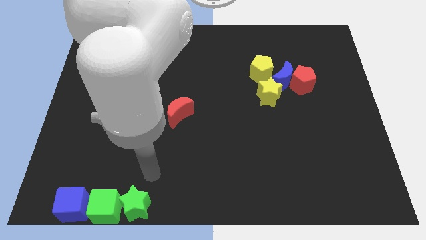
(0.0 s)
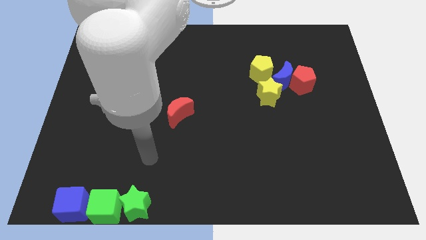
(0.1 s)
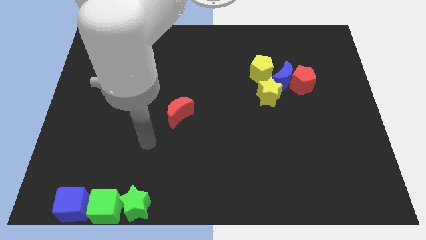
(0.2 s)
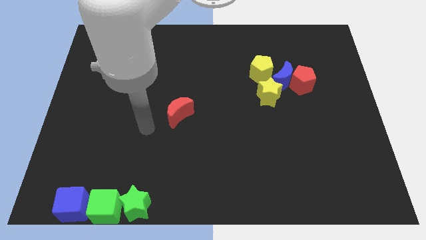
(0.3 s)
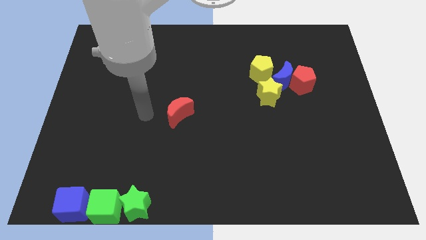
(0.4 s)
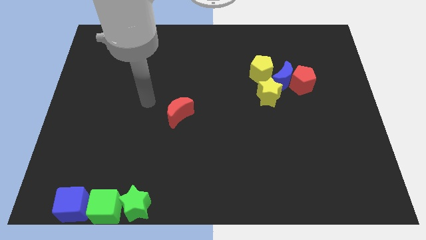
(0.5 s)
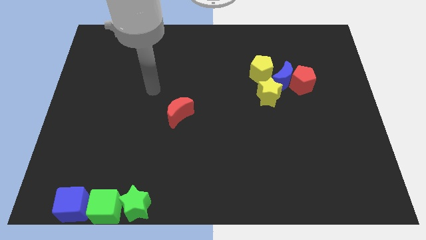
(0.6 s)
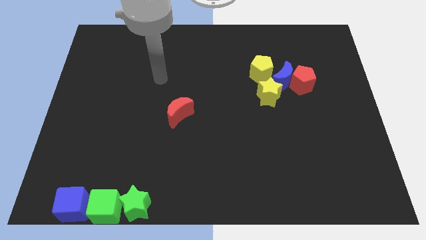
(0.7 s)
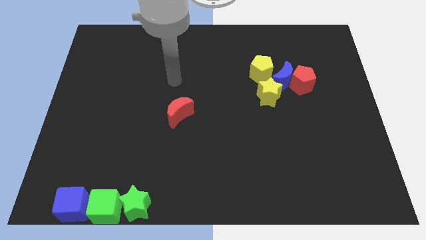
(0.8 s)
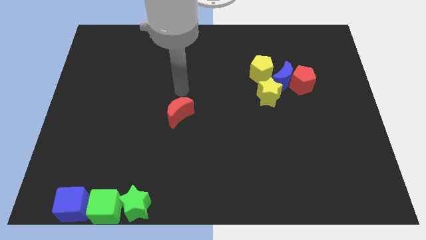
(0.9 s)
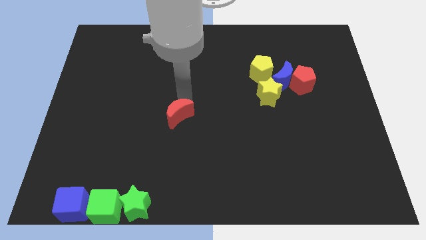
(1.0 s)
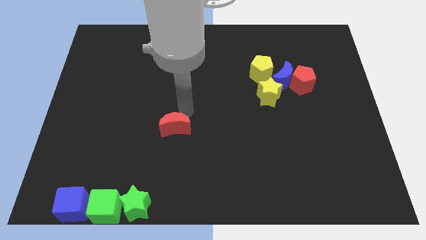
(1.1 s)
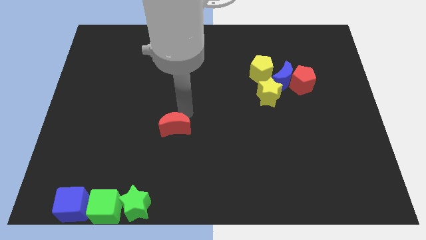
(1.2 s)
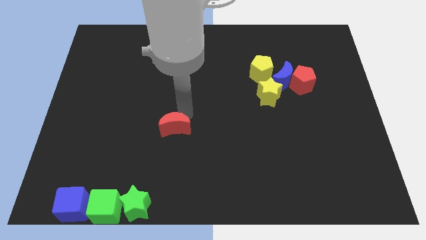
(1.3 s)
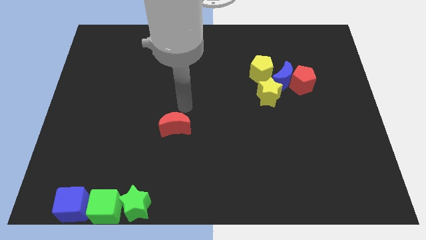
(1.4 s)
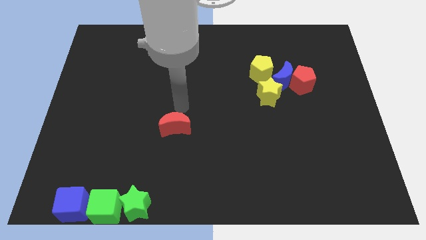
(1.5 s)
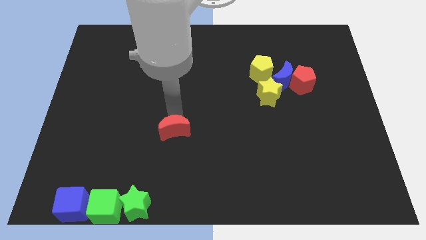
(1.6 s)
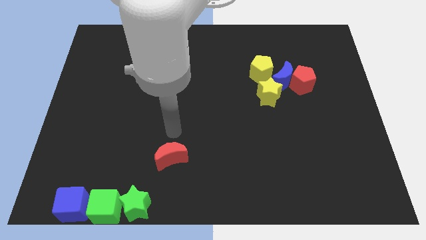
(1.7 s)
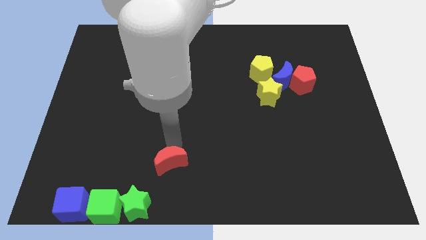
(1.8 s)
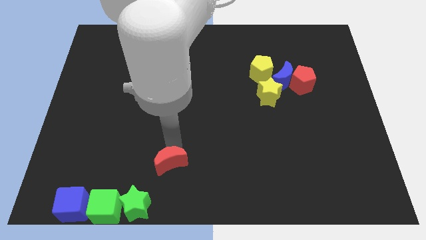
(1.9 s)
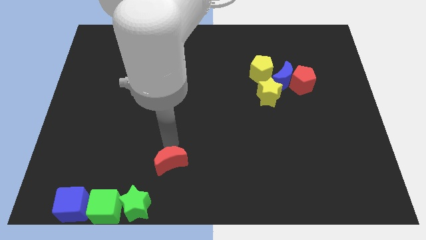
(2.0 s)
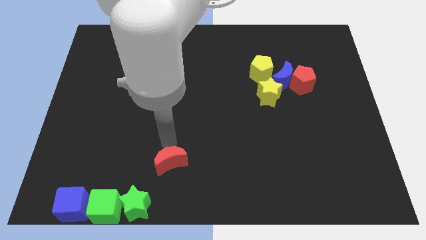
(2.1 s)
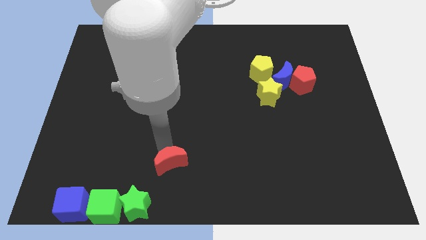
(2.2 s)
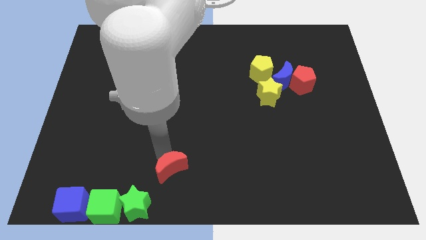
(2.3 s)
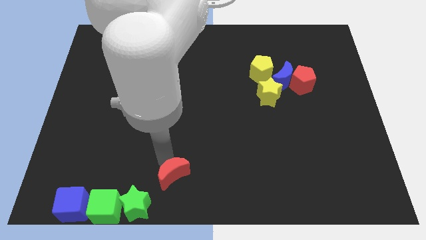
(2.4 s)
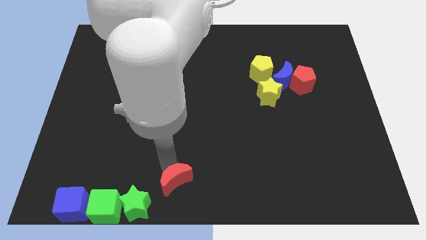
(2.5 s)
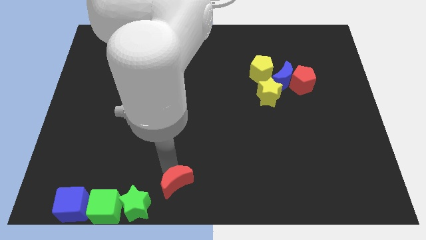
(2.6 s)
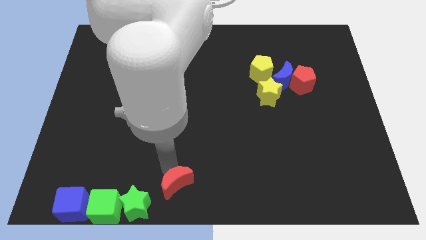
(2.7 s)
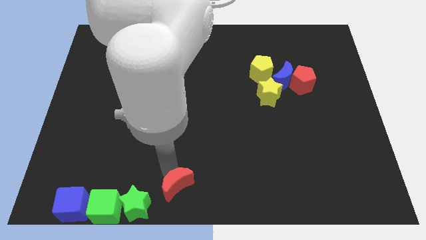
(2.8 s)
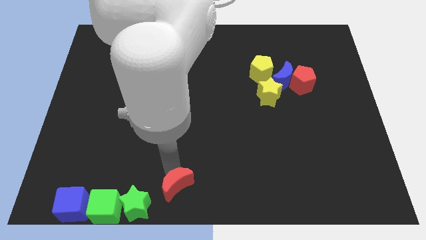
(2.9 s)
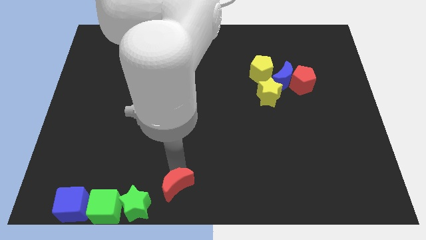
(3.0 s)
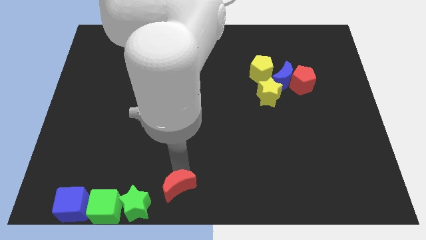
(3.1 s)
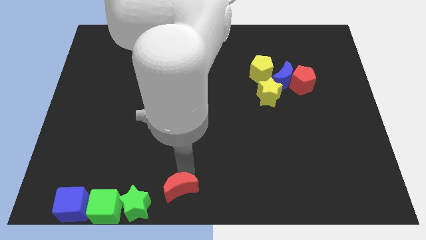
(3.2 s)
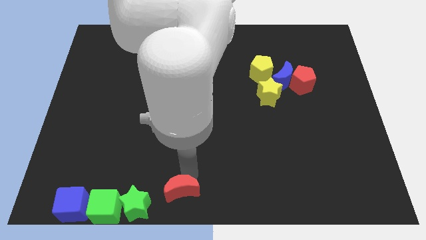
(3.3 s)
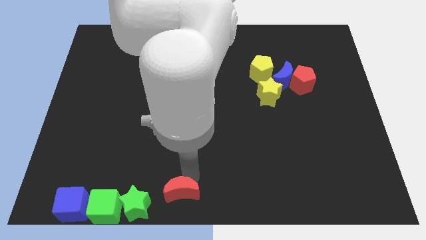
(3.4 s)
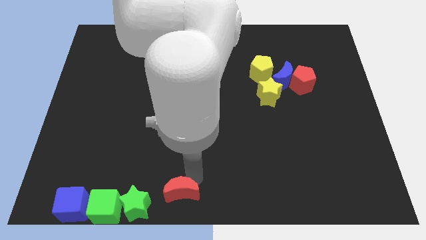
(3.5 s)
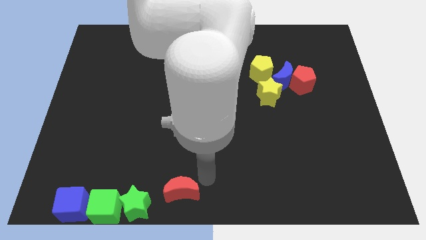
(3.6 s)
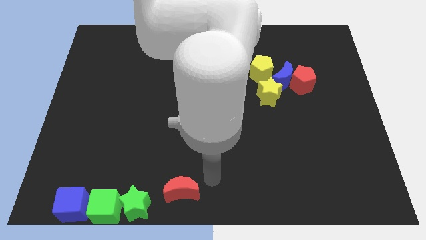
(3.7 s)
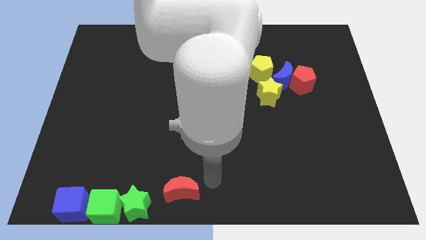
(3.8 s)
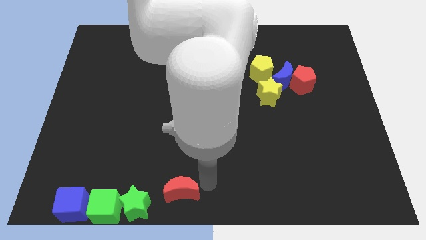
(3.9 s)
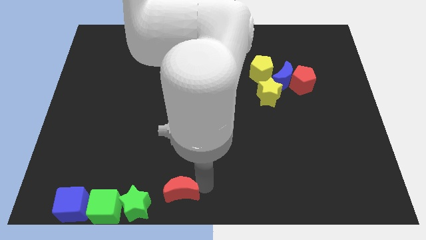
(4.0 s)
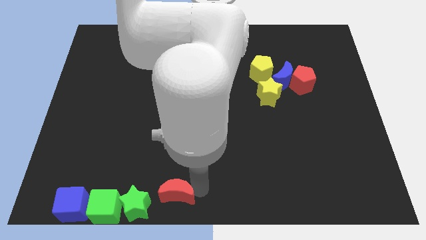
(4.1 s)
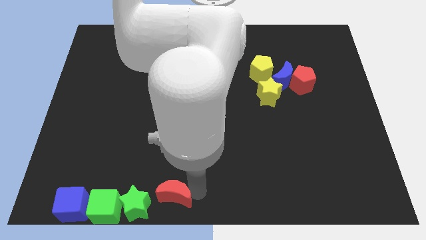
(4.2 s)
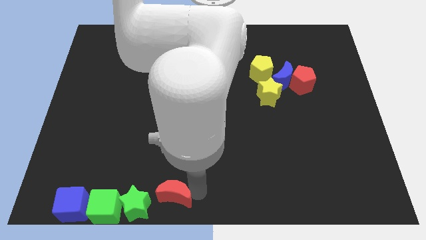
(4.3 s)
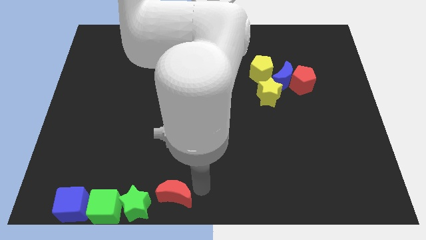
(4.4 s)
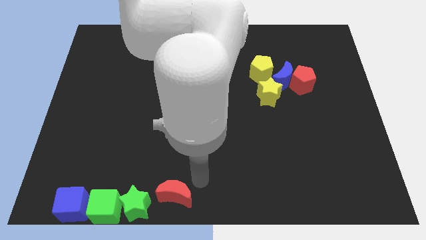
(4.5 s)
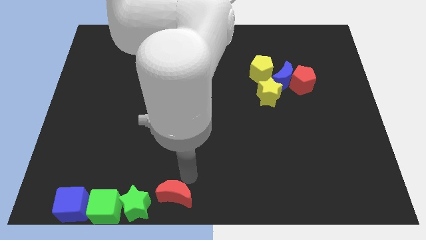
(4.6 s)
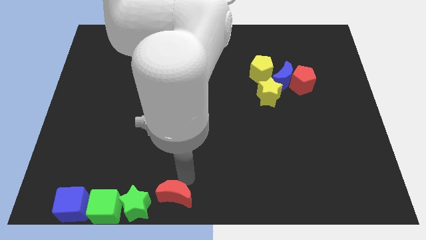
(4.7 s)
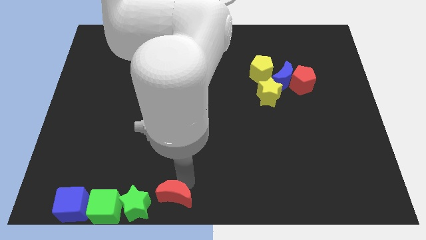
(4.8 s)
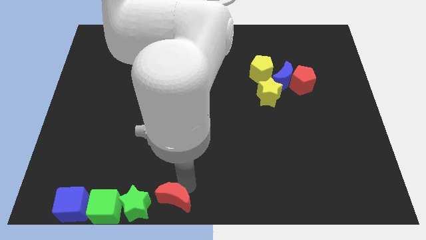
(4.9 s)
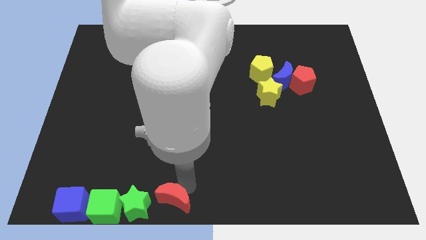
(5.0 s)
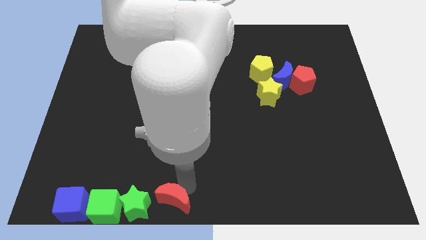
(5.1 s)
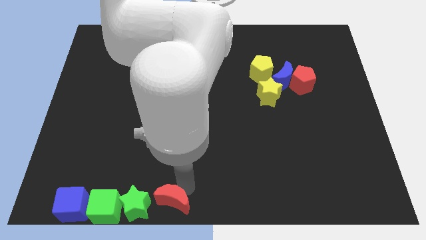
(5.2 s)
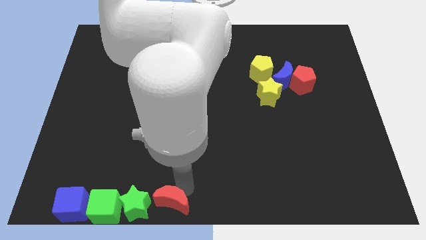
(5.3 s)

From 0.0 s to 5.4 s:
push the red crescent to the right of the green star

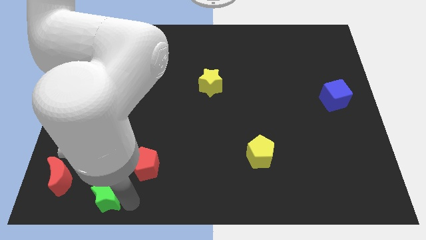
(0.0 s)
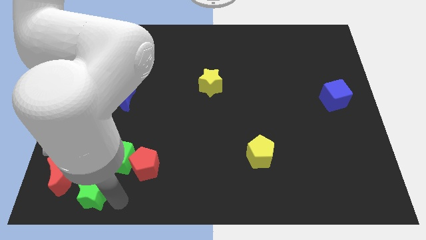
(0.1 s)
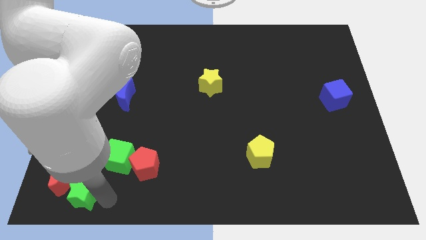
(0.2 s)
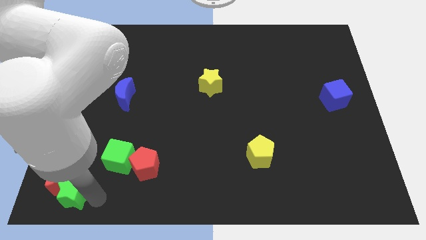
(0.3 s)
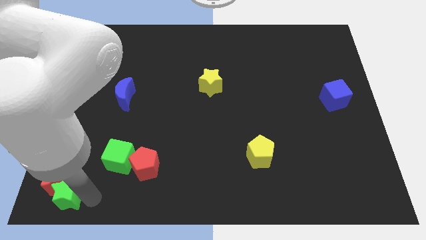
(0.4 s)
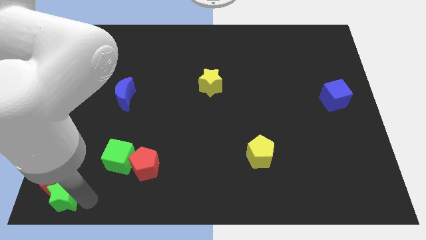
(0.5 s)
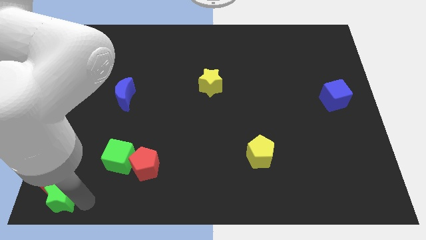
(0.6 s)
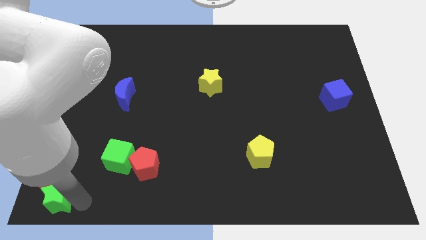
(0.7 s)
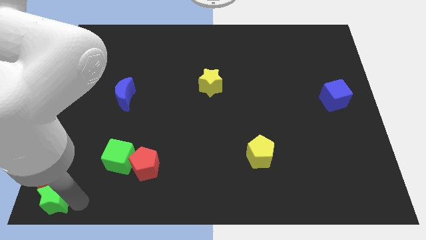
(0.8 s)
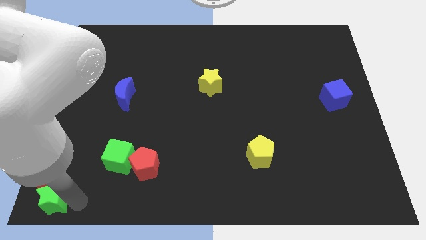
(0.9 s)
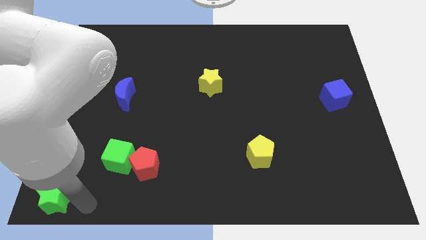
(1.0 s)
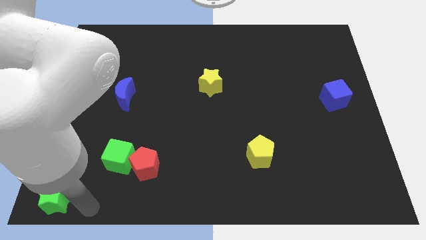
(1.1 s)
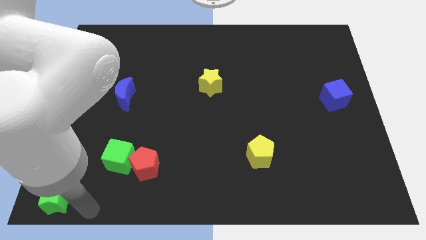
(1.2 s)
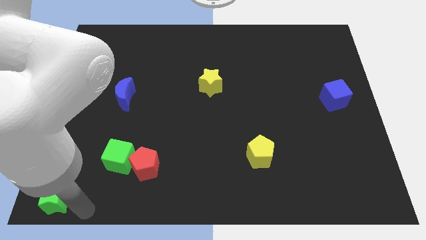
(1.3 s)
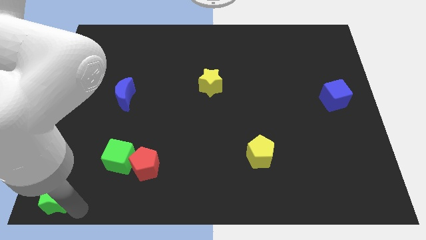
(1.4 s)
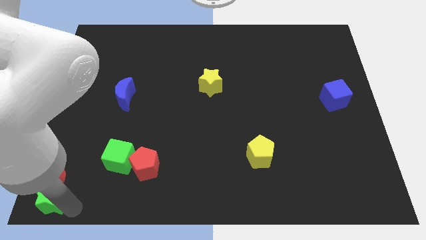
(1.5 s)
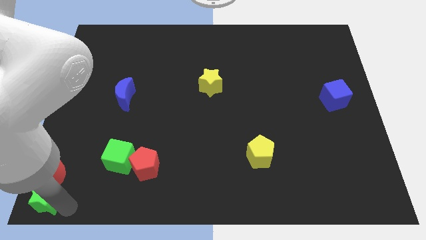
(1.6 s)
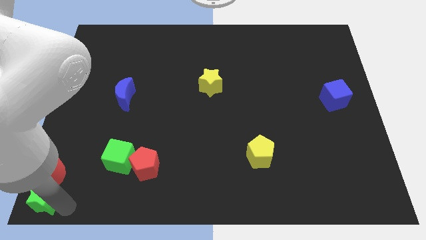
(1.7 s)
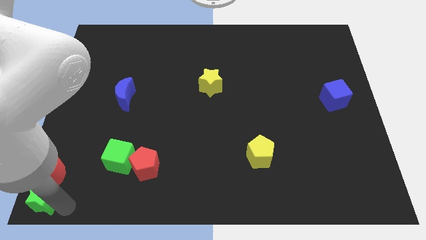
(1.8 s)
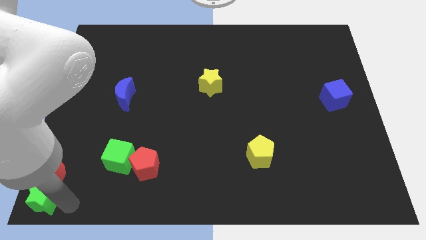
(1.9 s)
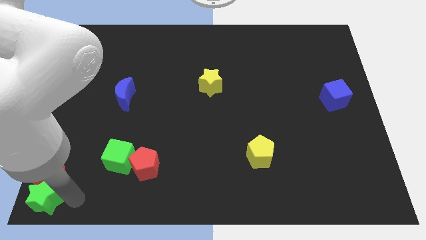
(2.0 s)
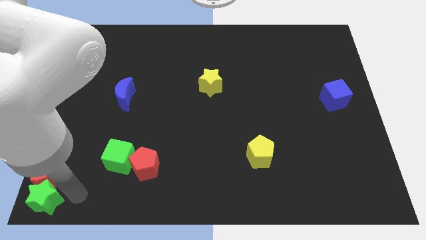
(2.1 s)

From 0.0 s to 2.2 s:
place green star below the red moon

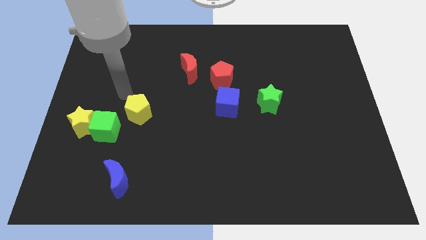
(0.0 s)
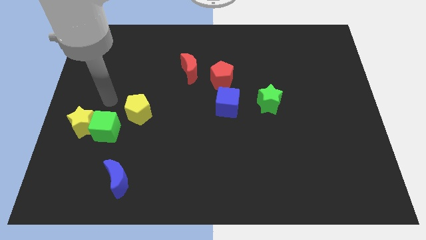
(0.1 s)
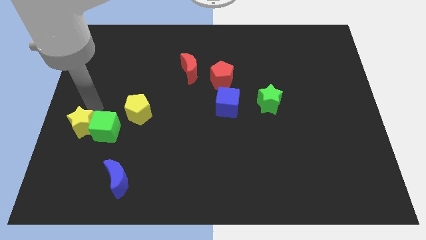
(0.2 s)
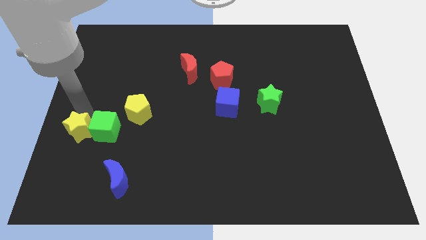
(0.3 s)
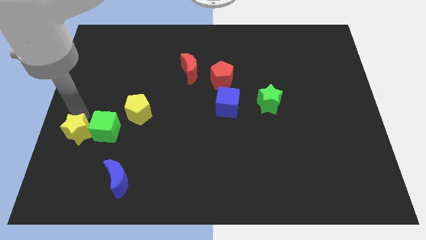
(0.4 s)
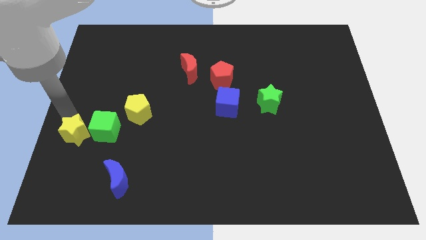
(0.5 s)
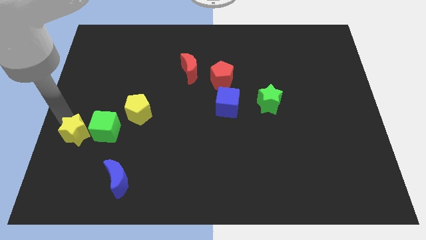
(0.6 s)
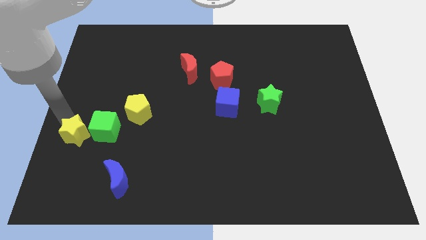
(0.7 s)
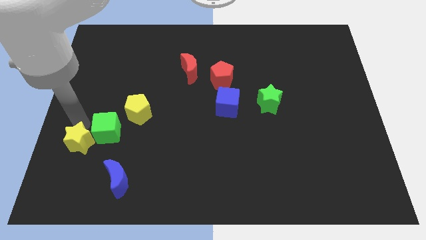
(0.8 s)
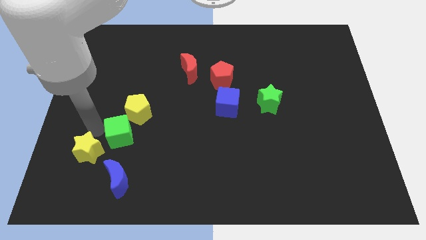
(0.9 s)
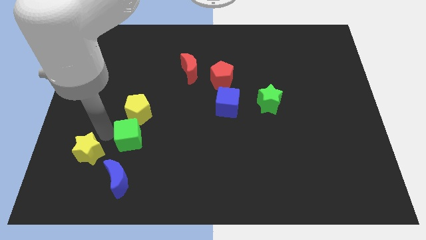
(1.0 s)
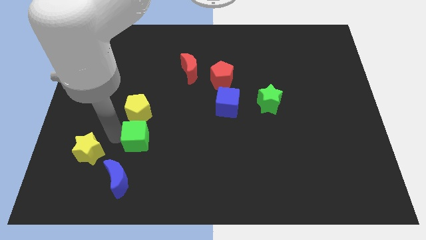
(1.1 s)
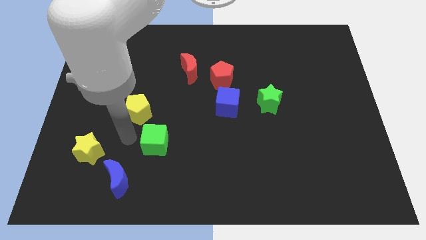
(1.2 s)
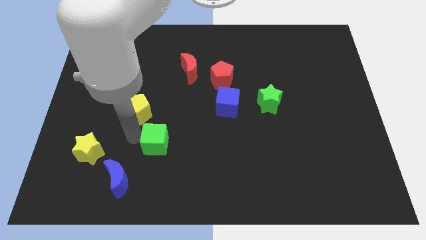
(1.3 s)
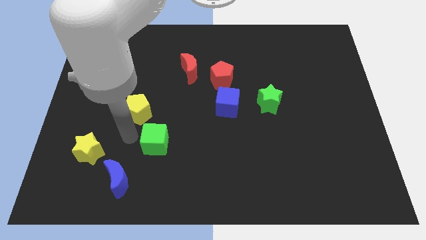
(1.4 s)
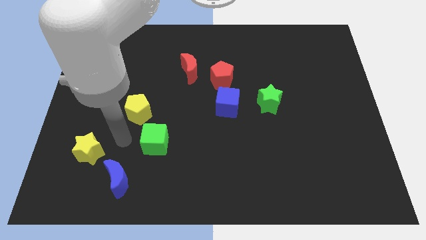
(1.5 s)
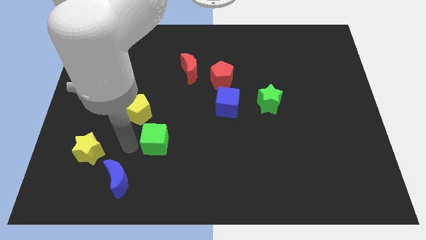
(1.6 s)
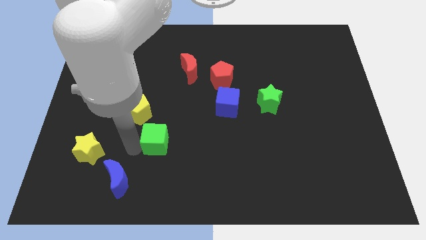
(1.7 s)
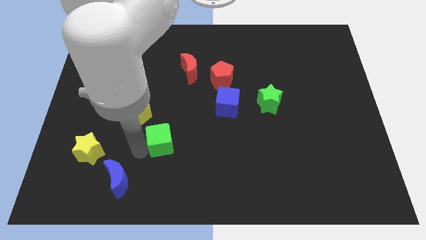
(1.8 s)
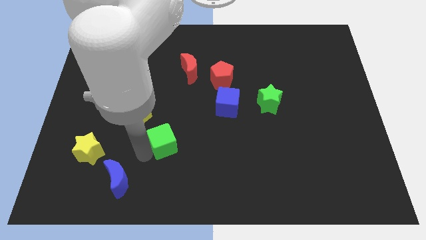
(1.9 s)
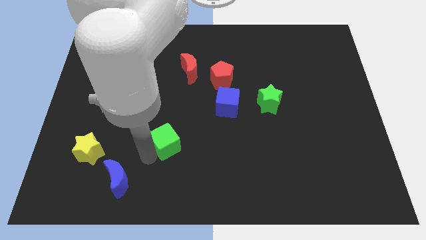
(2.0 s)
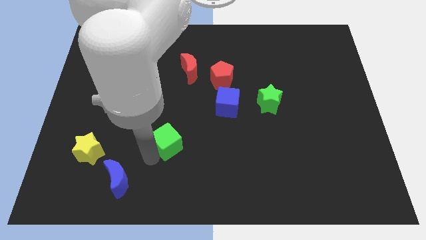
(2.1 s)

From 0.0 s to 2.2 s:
separate green cube and yellow star
